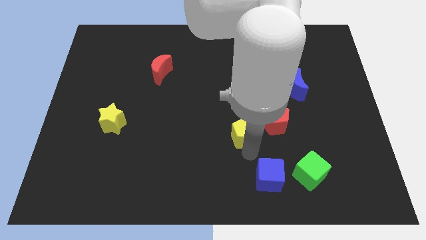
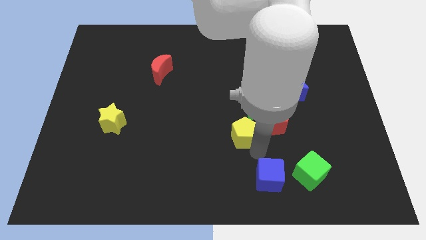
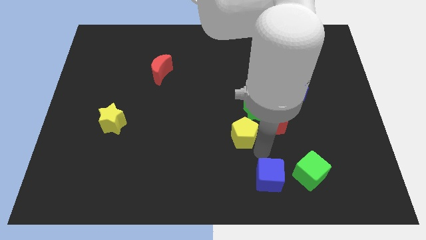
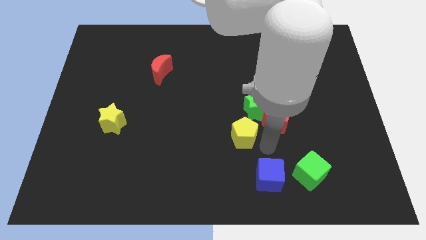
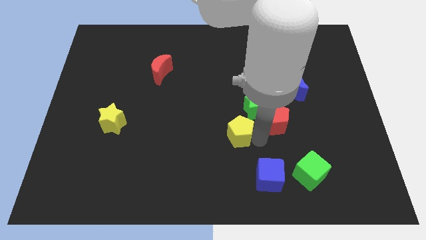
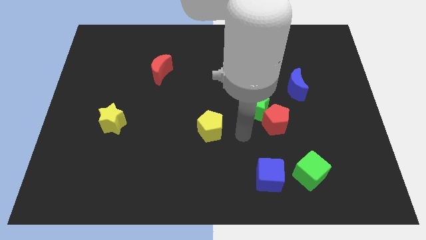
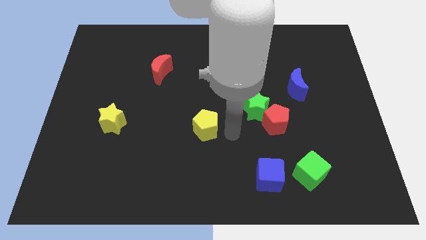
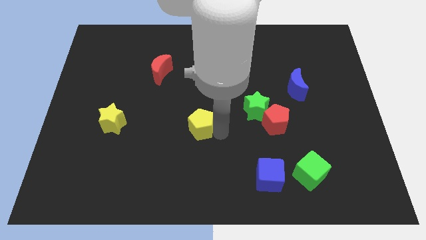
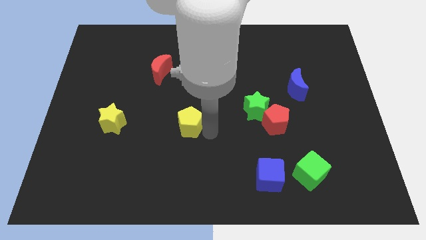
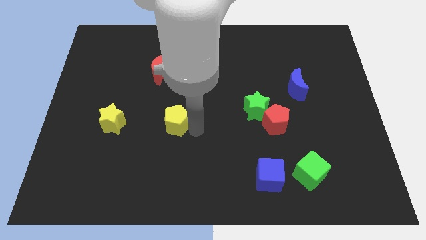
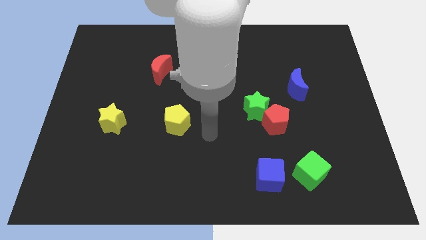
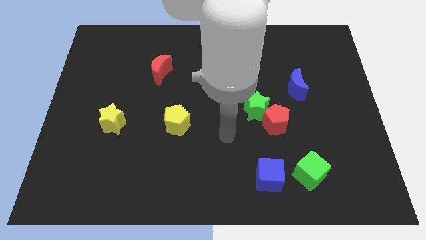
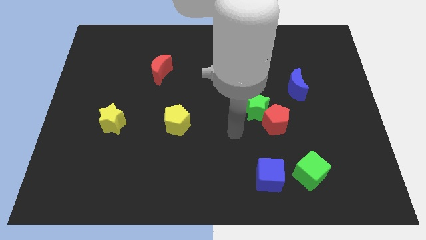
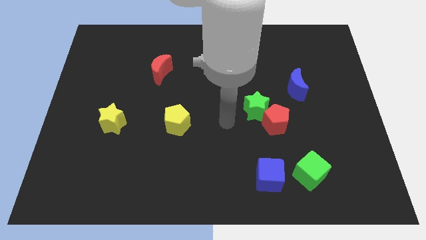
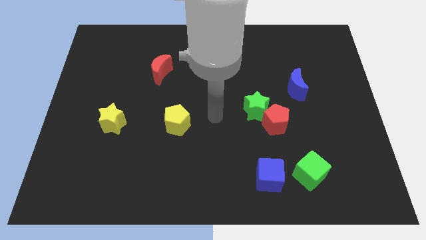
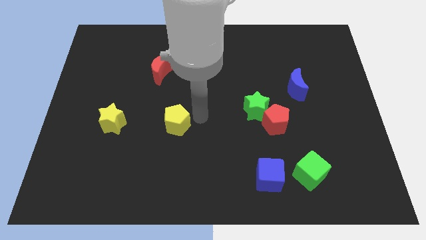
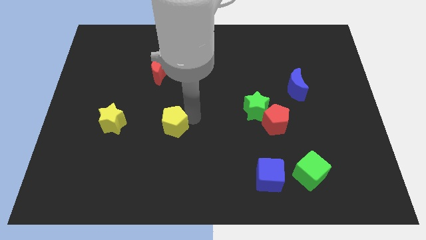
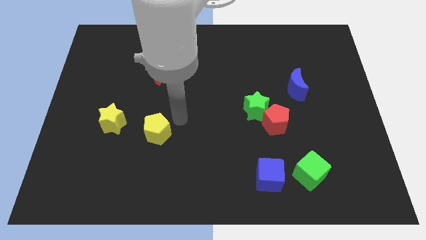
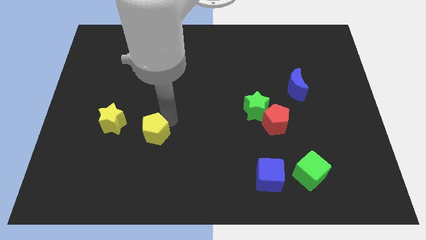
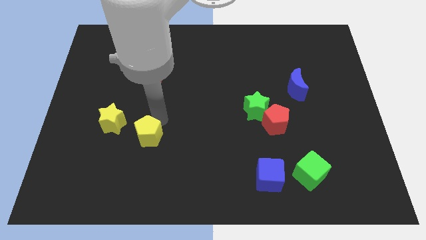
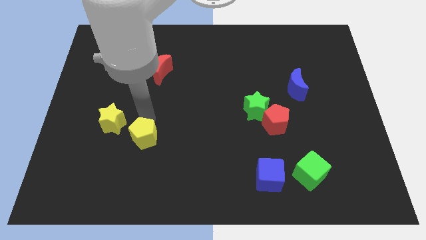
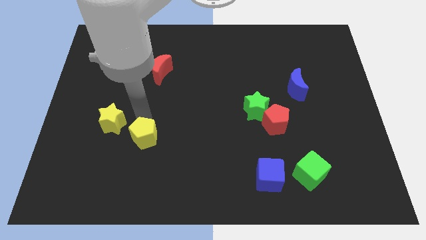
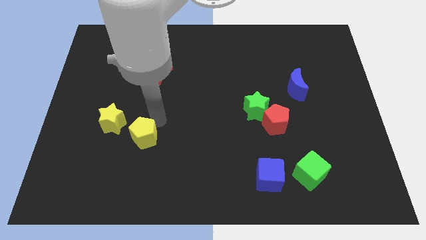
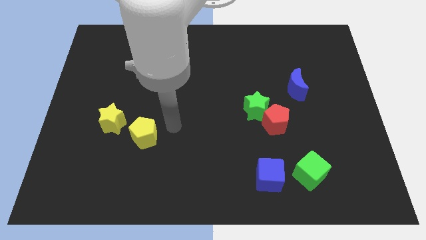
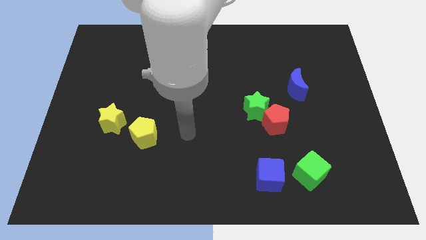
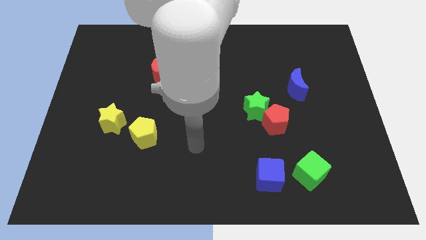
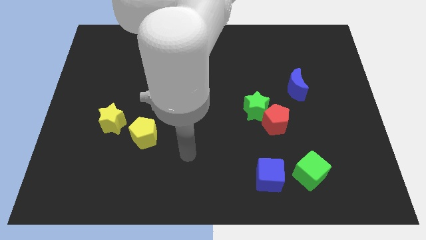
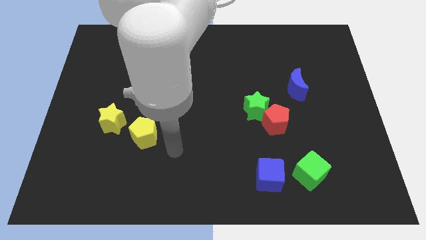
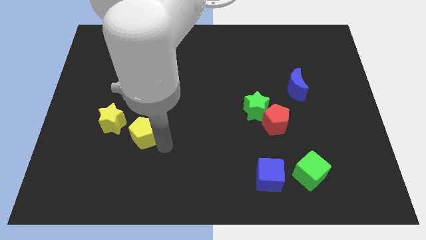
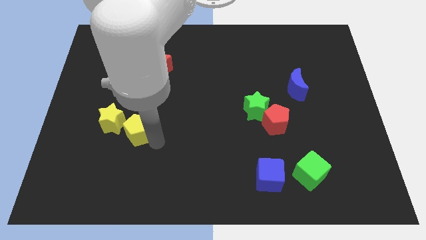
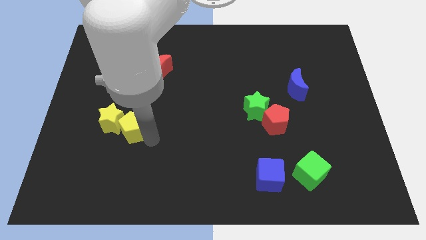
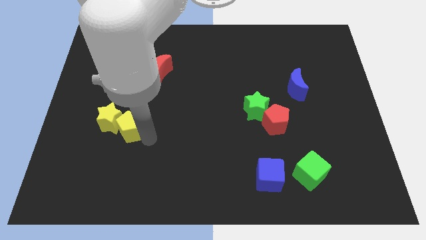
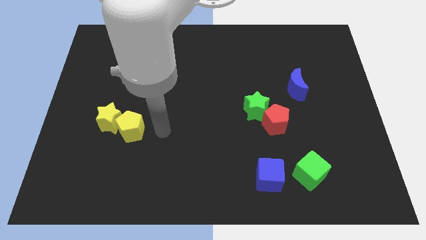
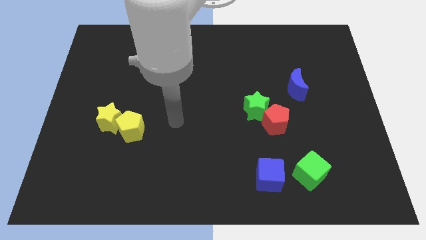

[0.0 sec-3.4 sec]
move the yellow pentagon to the right side of the yellow star

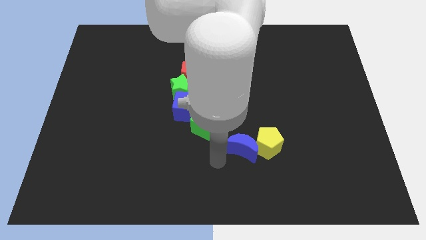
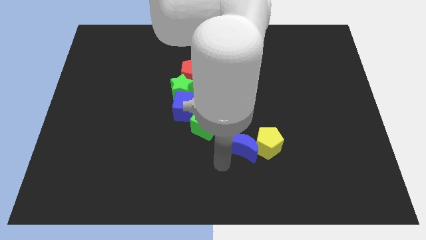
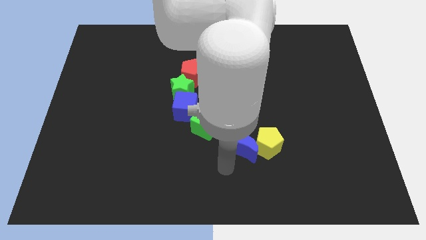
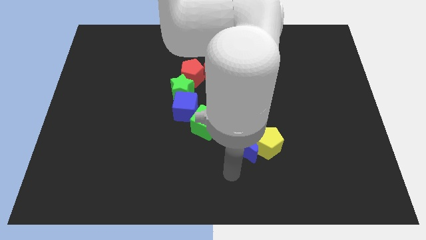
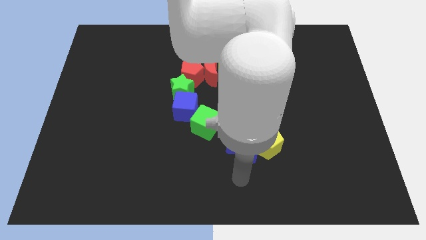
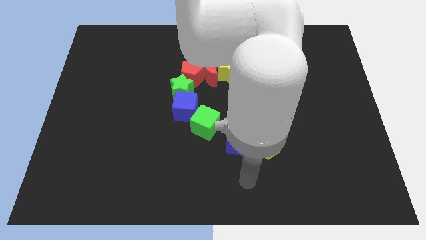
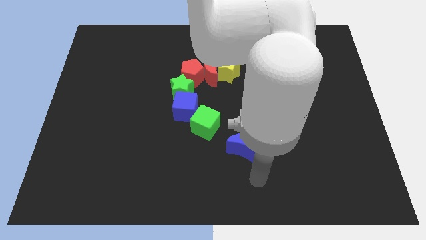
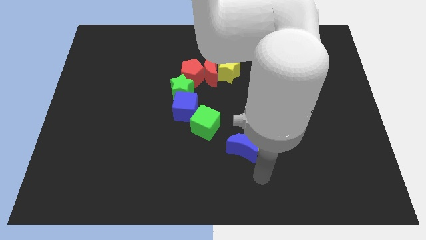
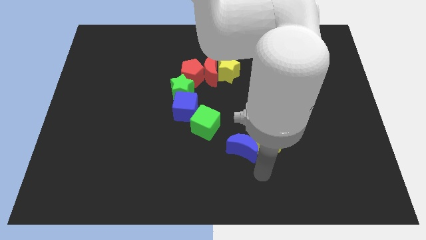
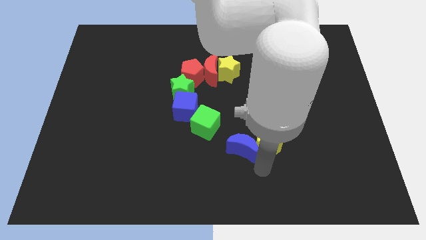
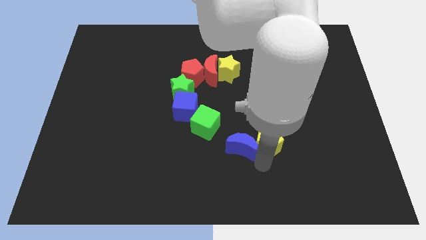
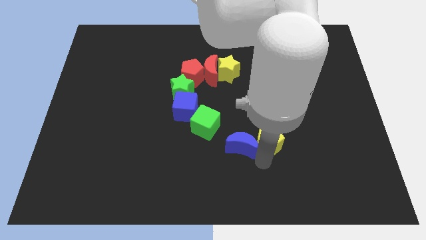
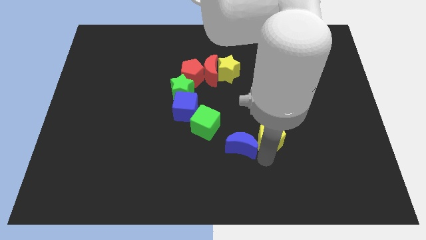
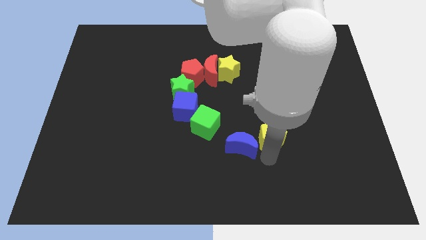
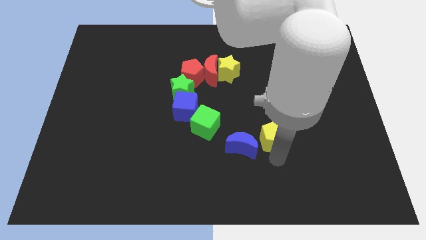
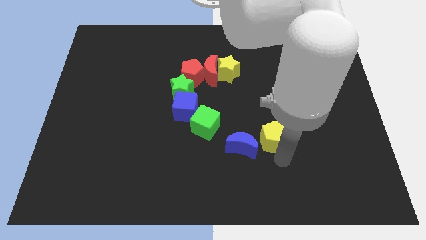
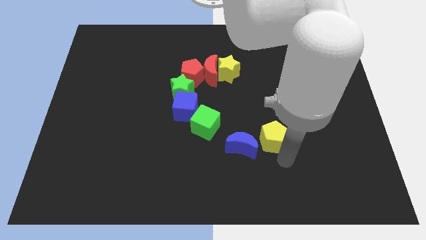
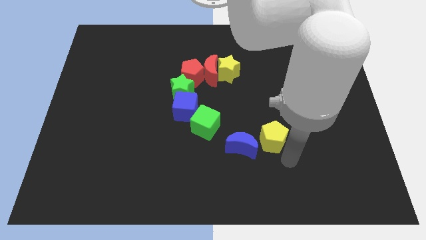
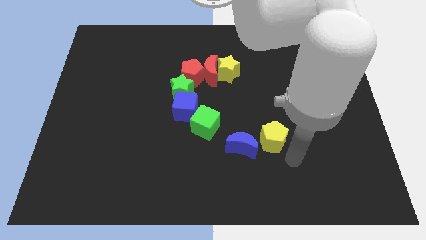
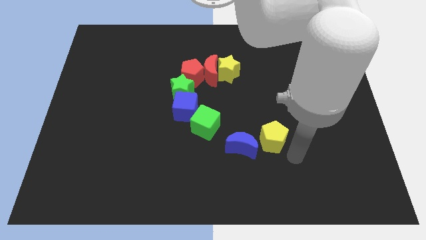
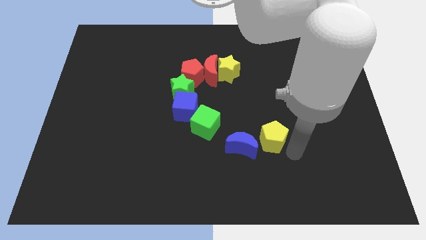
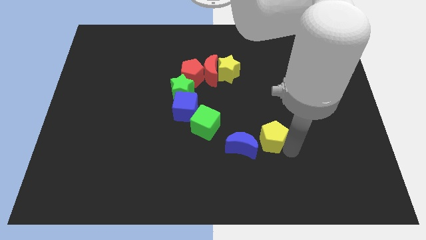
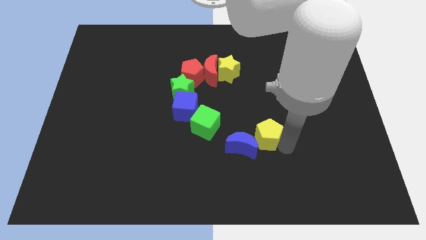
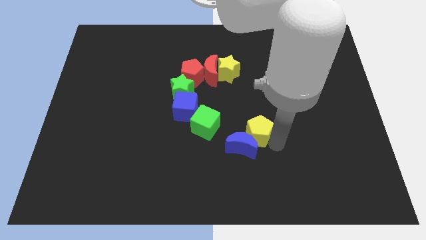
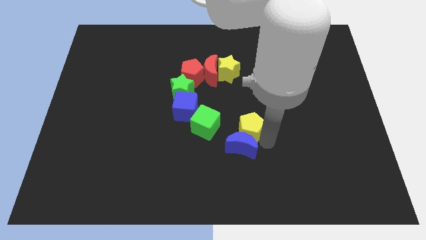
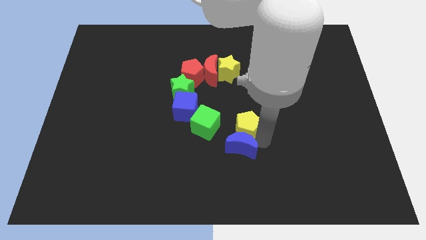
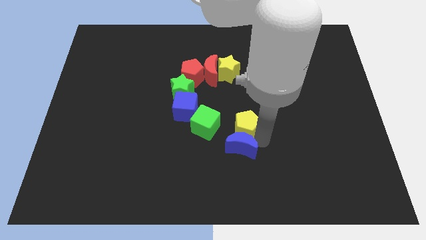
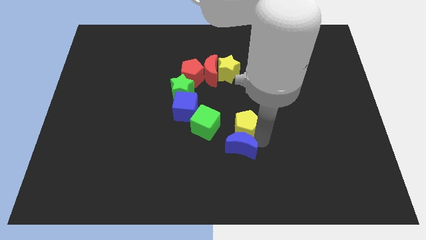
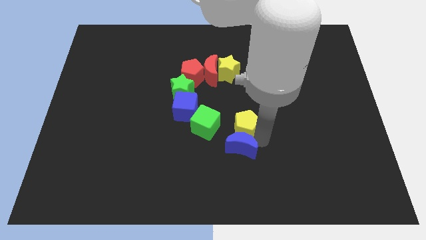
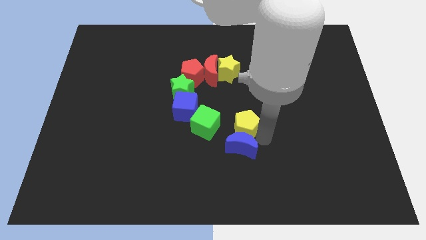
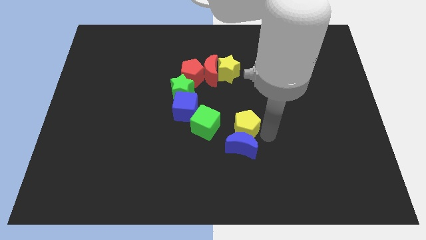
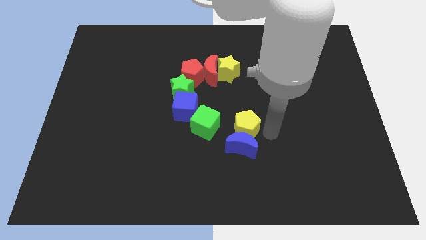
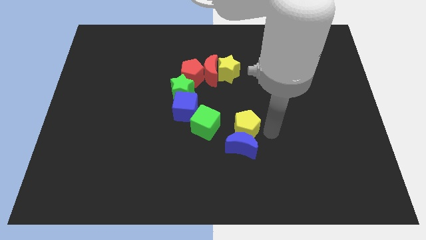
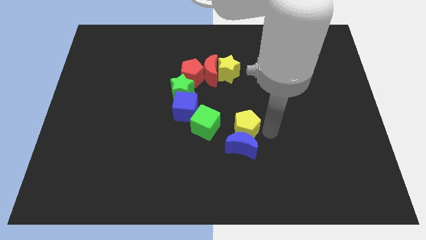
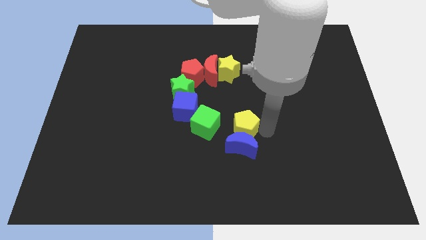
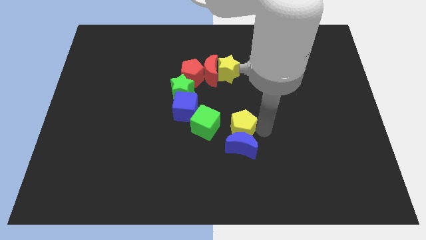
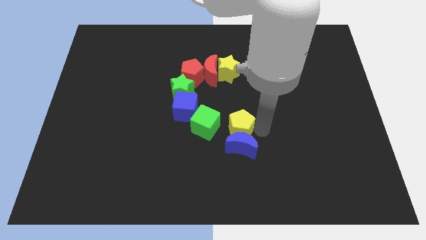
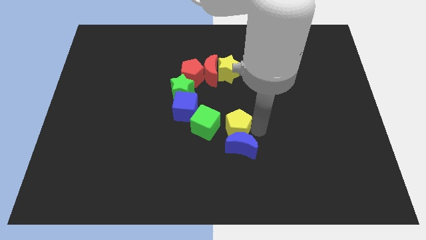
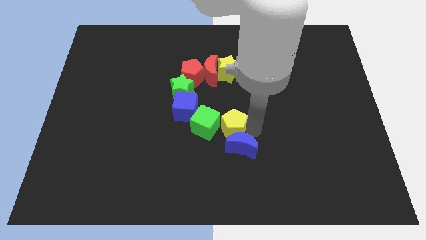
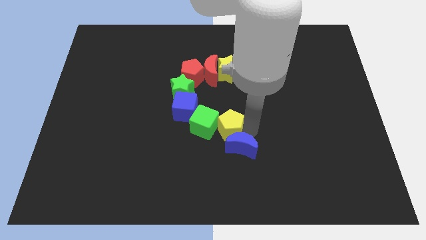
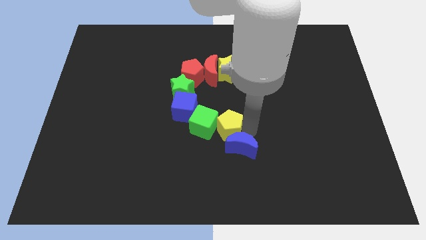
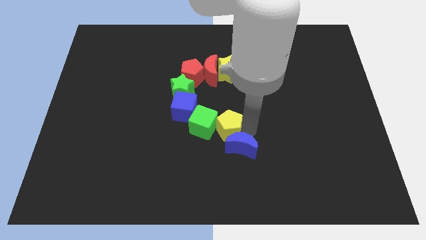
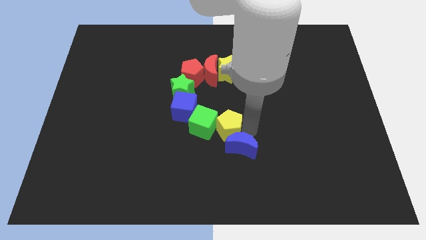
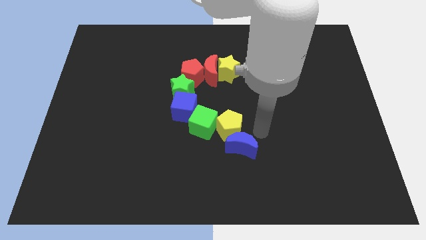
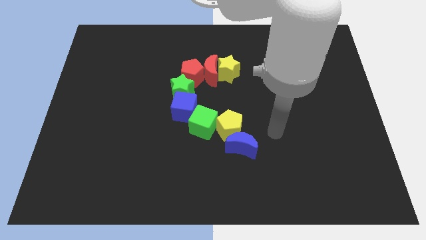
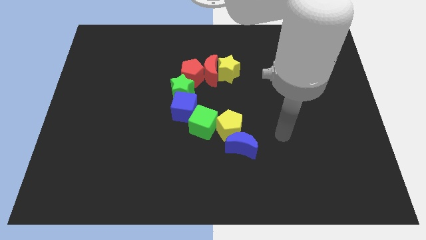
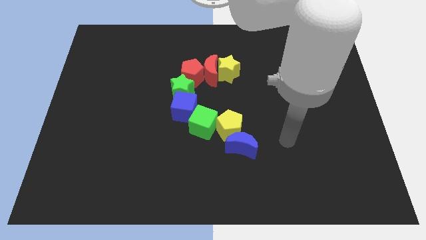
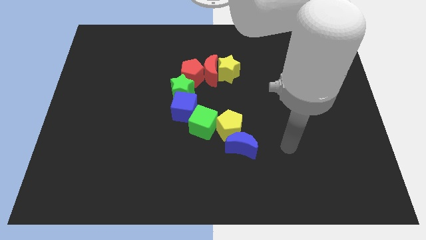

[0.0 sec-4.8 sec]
push the yellow pentagon to the right of the green cube

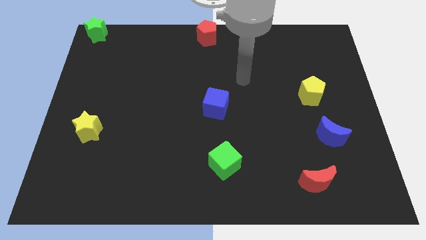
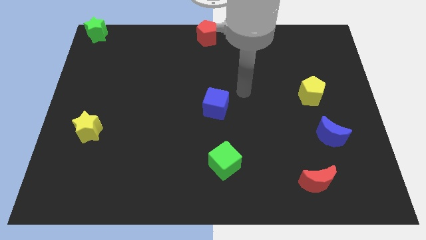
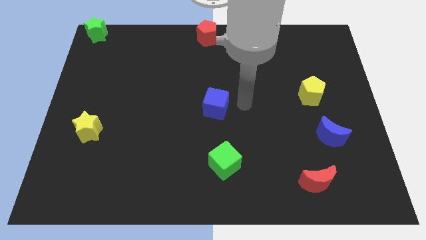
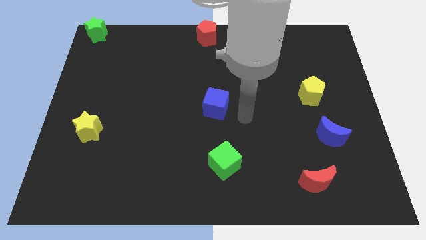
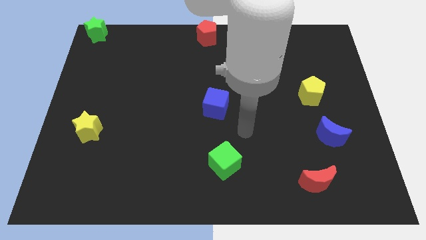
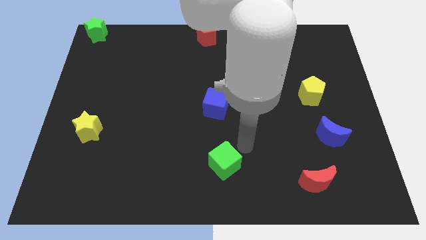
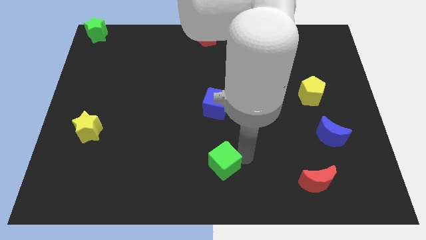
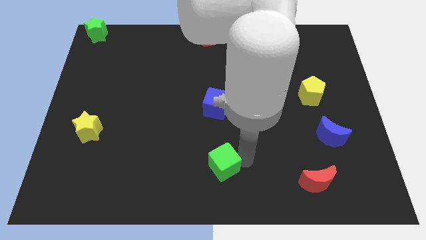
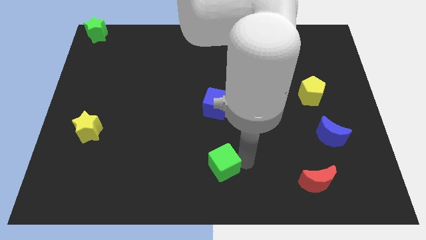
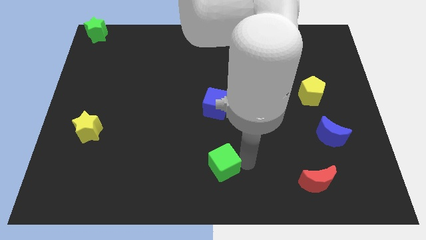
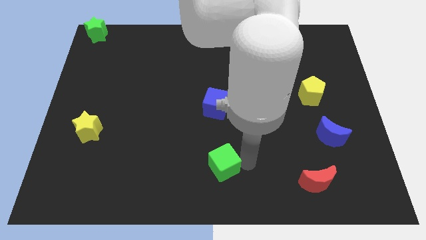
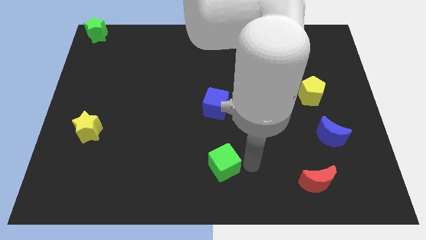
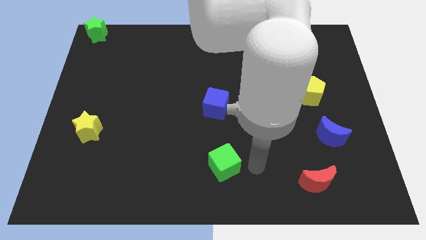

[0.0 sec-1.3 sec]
touch the green cube on right
